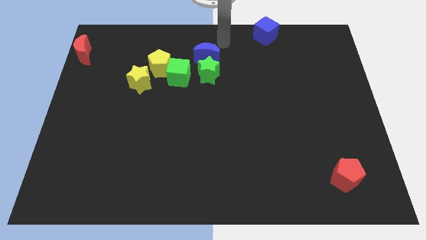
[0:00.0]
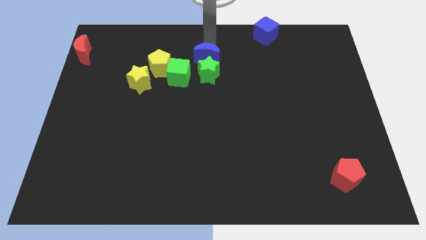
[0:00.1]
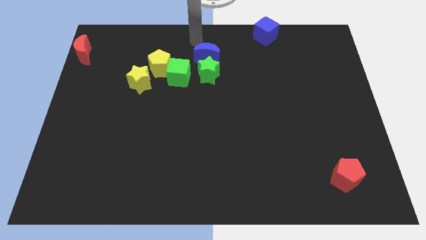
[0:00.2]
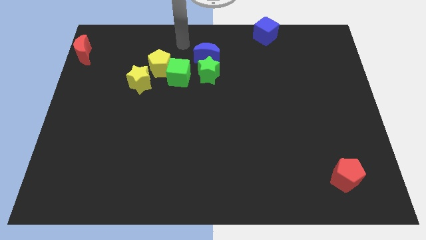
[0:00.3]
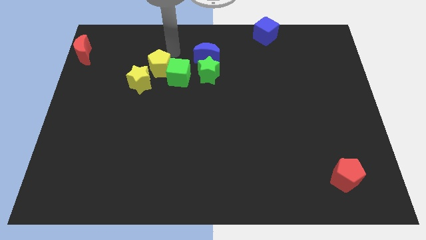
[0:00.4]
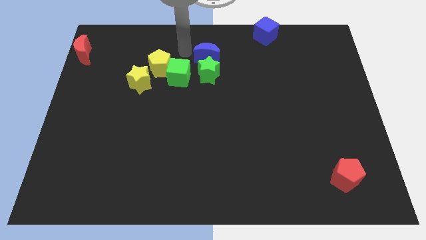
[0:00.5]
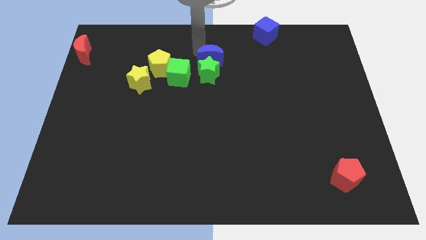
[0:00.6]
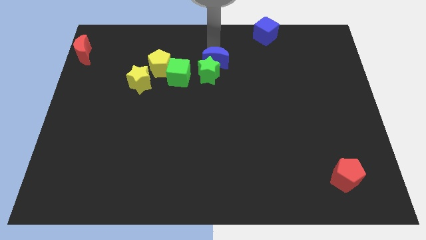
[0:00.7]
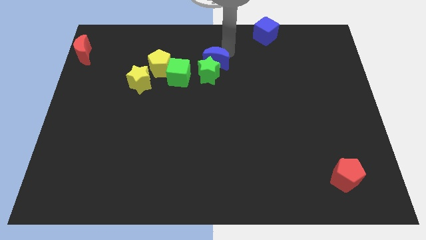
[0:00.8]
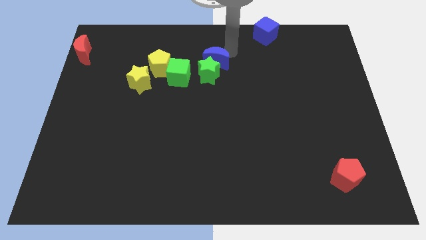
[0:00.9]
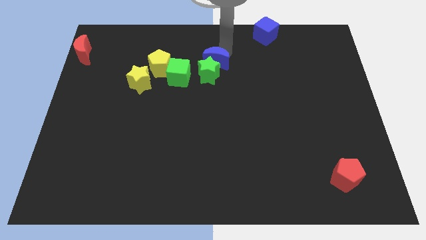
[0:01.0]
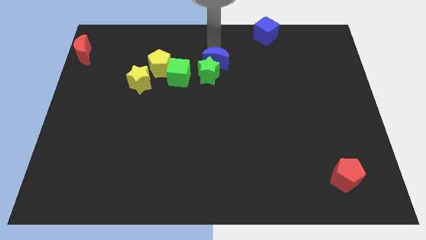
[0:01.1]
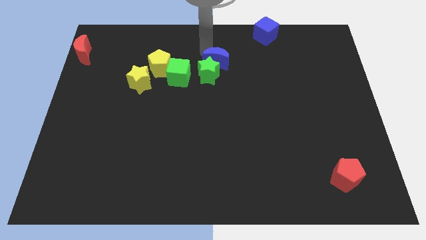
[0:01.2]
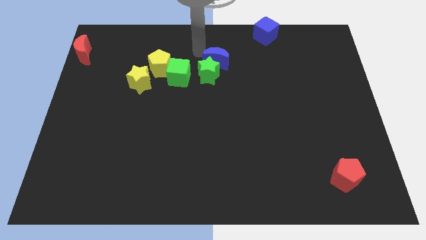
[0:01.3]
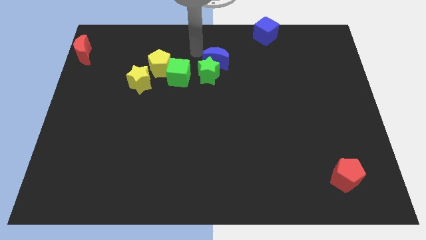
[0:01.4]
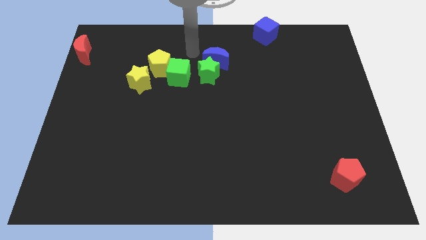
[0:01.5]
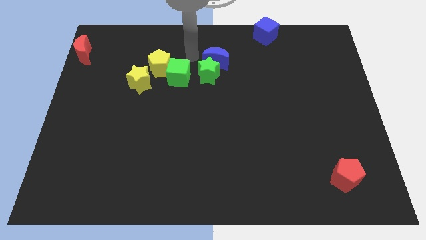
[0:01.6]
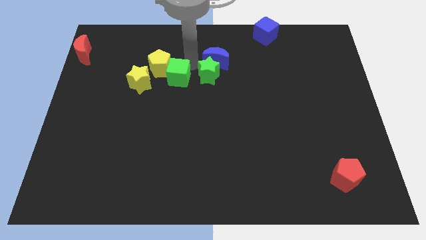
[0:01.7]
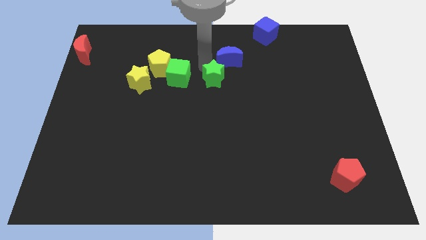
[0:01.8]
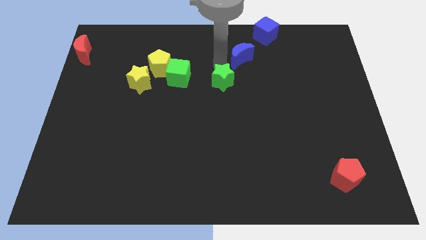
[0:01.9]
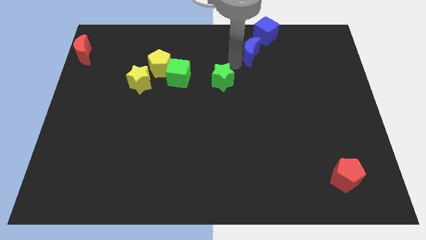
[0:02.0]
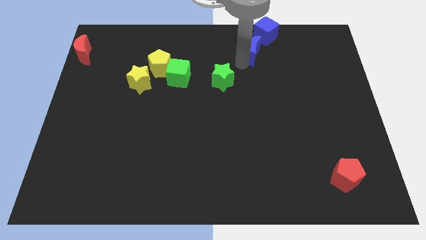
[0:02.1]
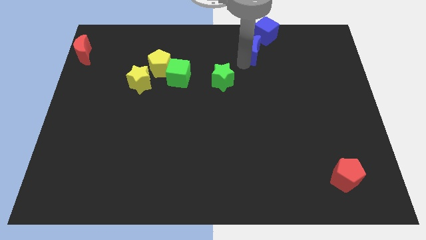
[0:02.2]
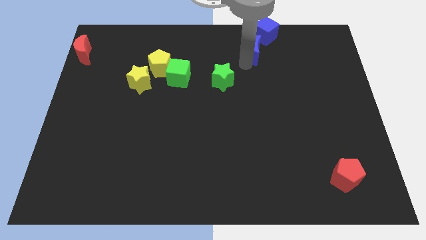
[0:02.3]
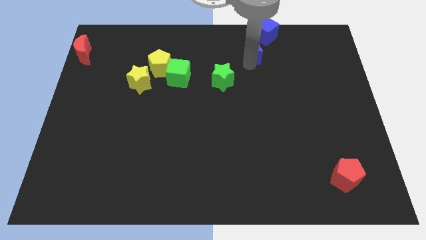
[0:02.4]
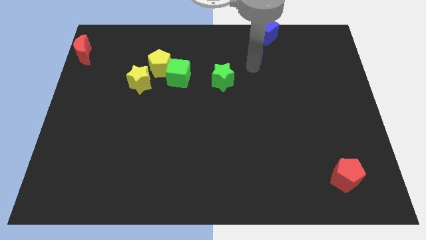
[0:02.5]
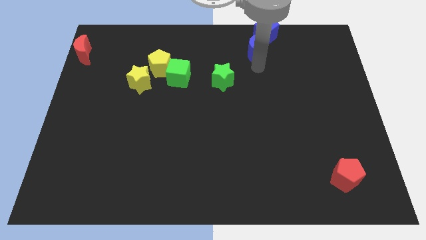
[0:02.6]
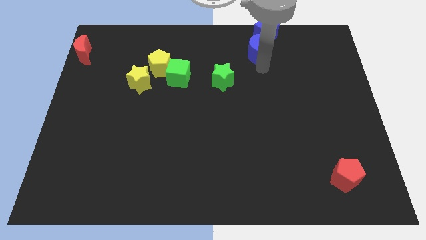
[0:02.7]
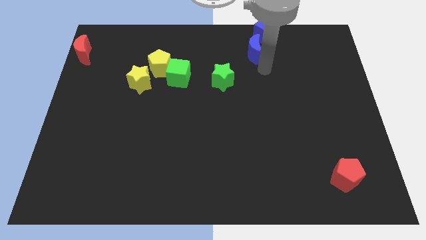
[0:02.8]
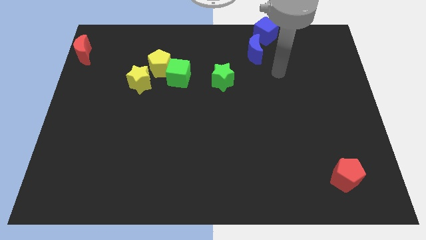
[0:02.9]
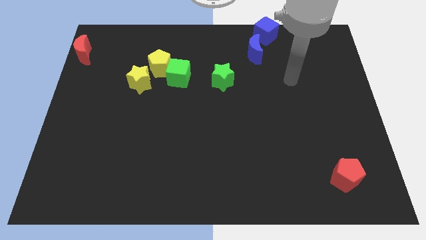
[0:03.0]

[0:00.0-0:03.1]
move blue crescent to the left of the blue cube

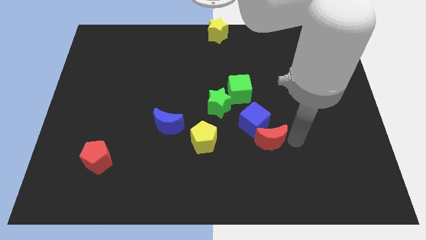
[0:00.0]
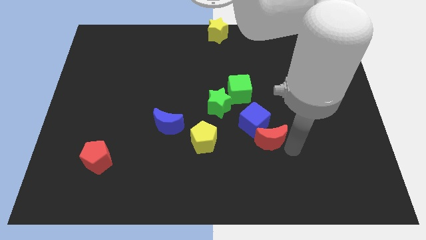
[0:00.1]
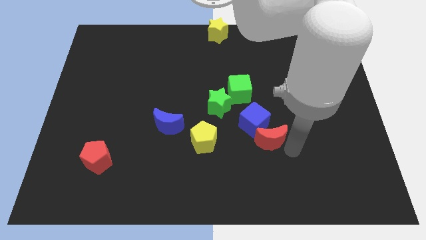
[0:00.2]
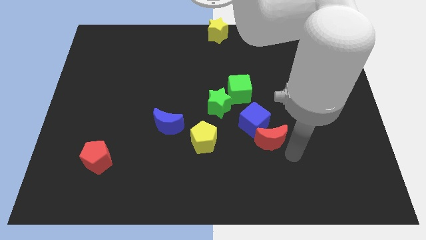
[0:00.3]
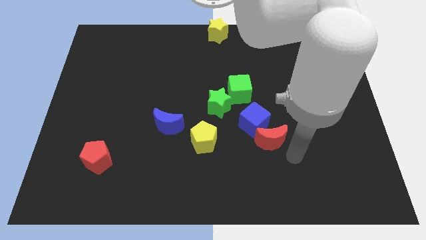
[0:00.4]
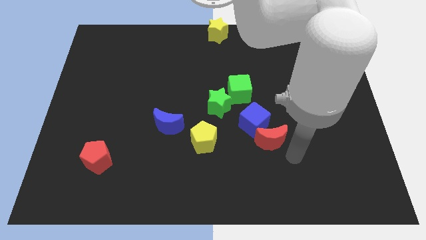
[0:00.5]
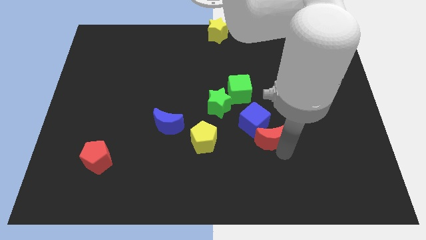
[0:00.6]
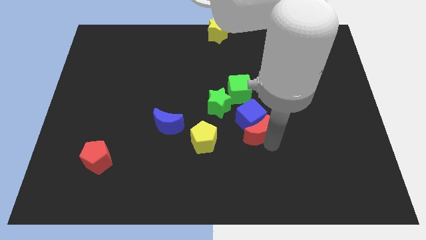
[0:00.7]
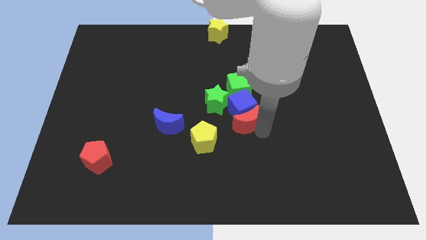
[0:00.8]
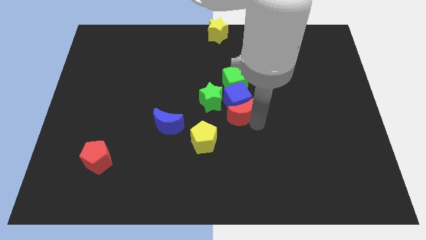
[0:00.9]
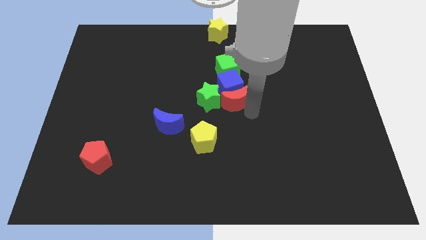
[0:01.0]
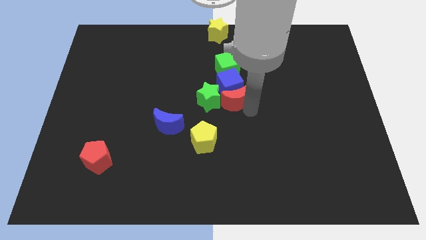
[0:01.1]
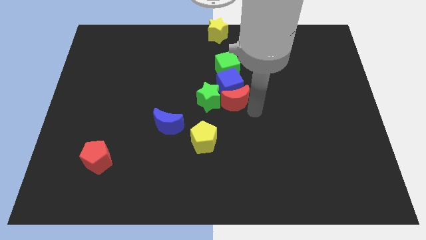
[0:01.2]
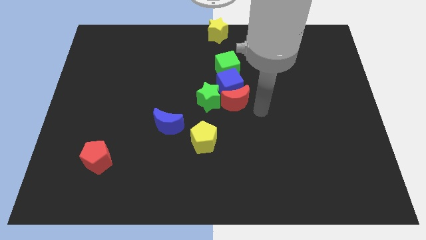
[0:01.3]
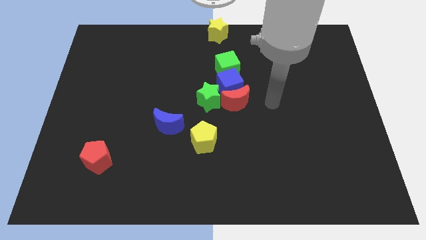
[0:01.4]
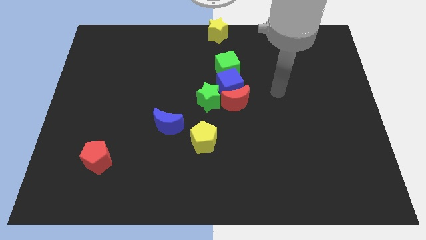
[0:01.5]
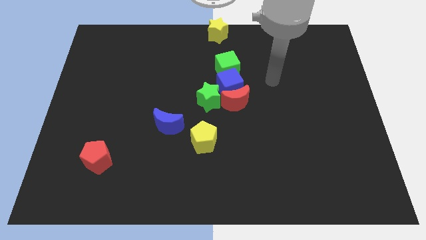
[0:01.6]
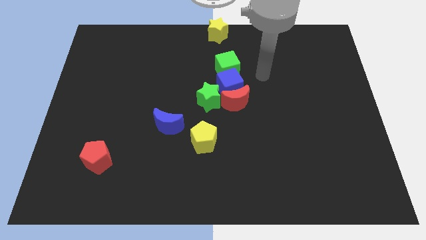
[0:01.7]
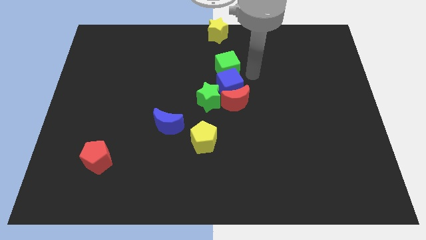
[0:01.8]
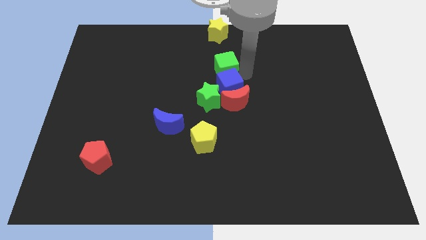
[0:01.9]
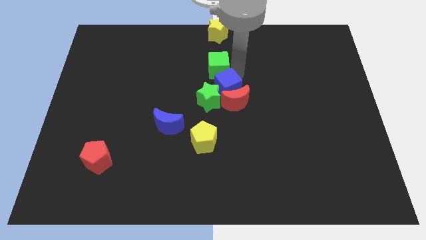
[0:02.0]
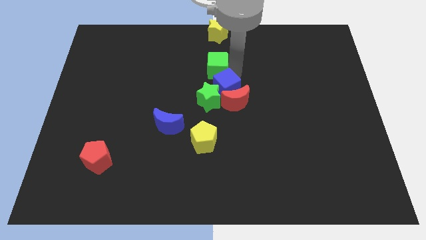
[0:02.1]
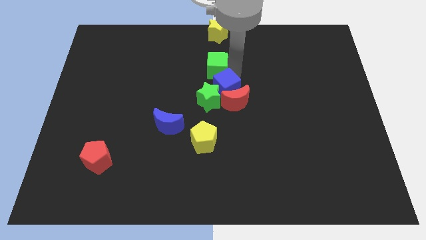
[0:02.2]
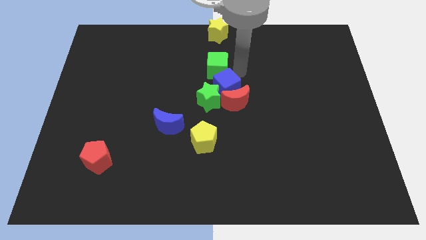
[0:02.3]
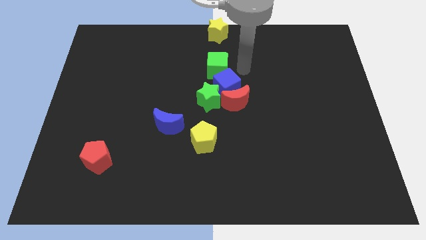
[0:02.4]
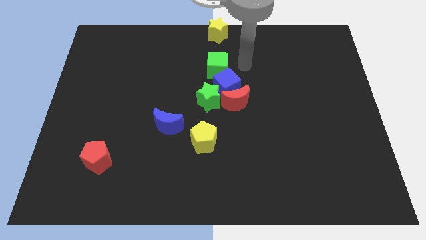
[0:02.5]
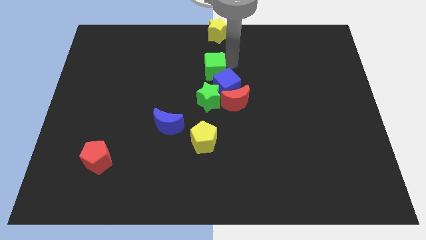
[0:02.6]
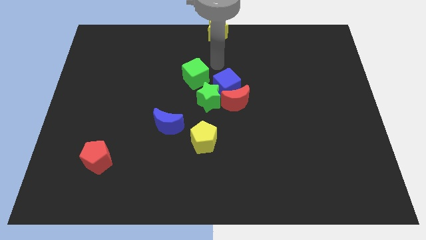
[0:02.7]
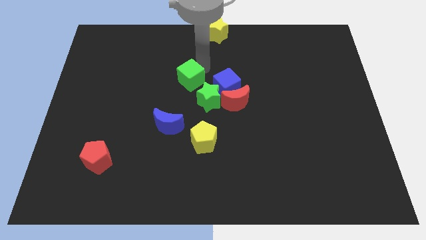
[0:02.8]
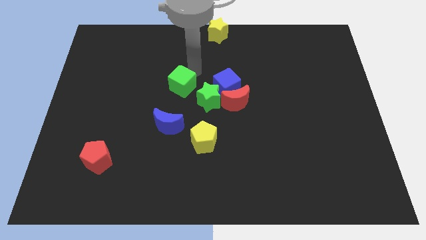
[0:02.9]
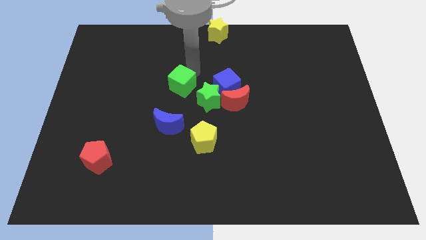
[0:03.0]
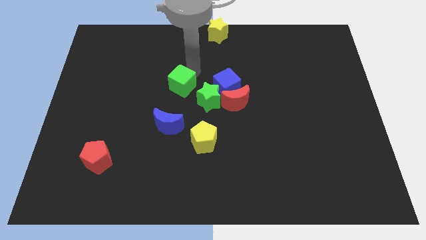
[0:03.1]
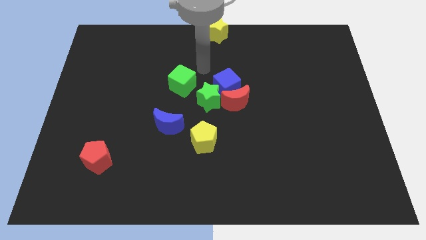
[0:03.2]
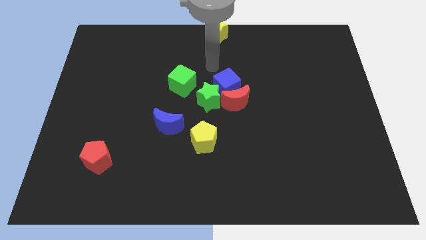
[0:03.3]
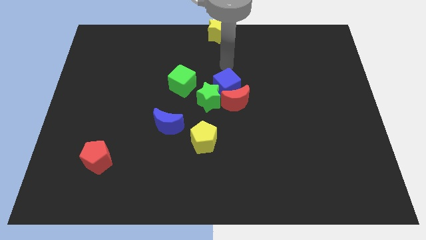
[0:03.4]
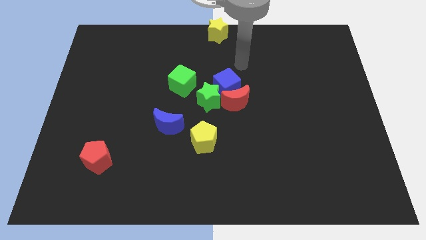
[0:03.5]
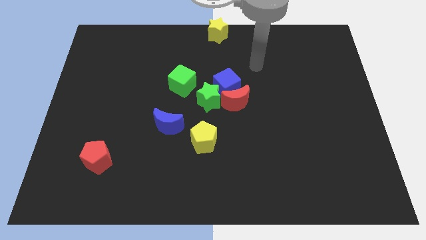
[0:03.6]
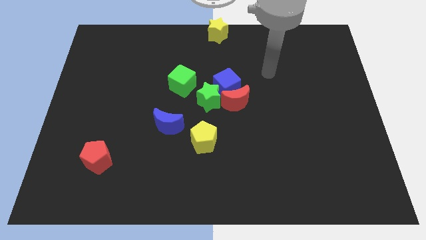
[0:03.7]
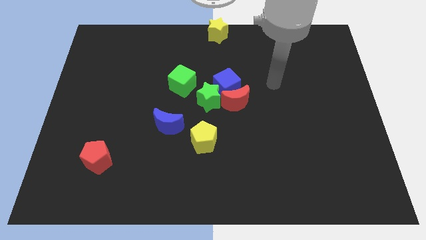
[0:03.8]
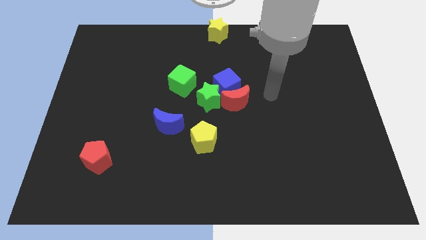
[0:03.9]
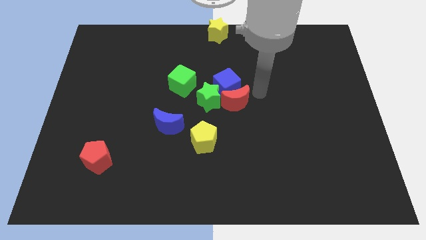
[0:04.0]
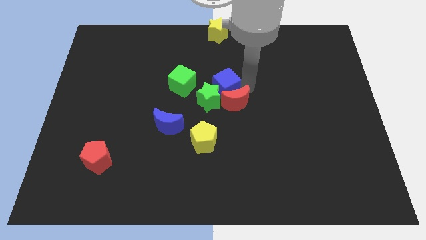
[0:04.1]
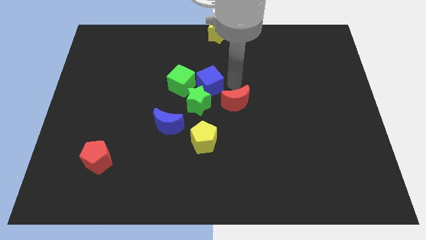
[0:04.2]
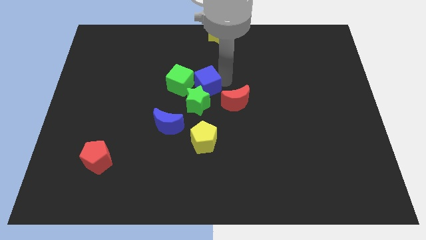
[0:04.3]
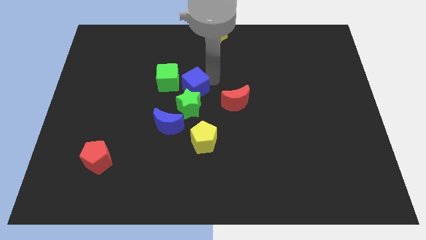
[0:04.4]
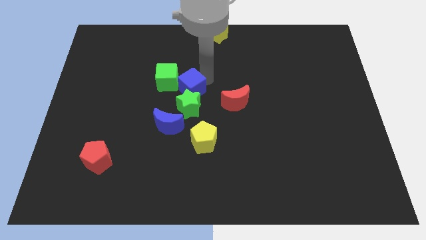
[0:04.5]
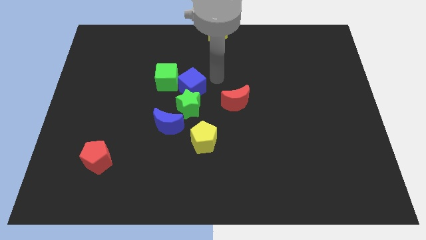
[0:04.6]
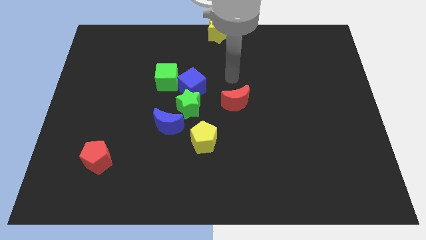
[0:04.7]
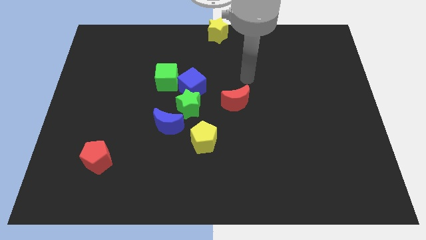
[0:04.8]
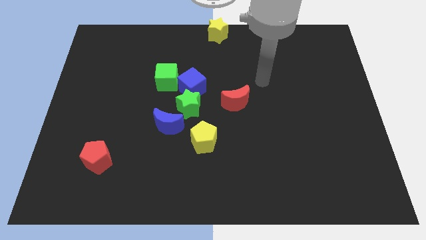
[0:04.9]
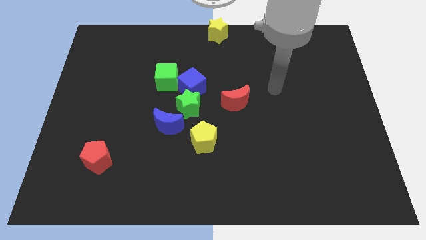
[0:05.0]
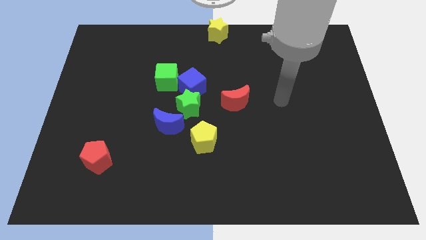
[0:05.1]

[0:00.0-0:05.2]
move the red moon blue cube and green cube slightly towards center left

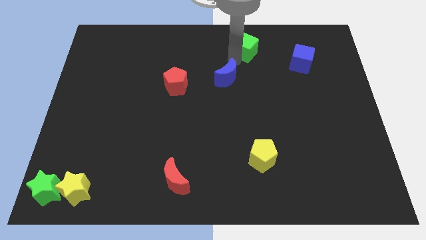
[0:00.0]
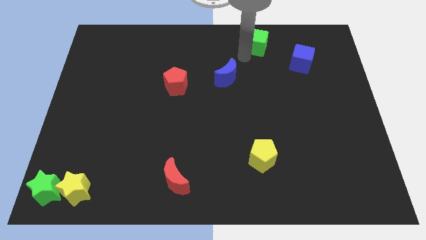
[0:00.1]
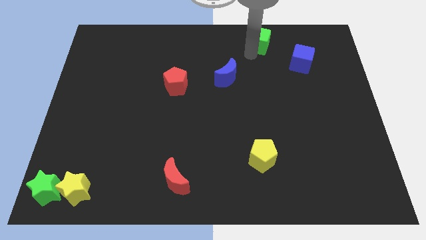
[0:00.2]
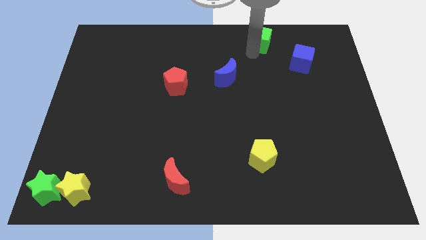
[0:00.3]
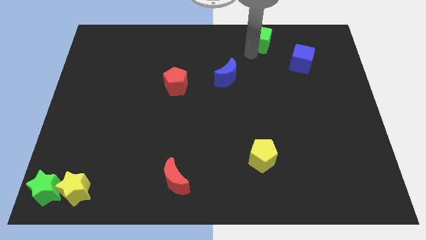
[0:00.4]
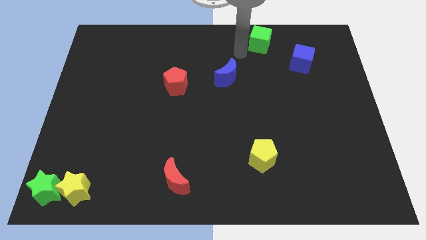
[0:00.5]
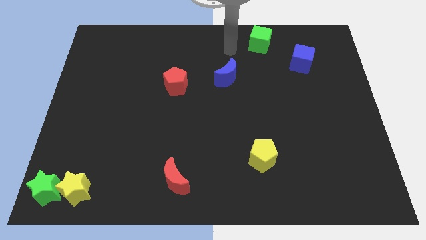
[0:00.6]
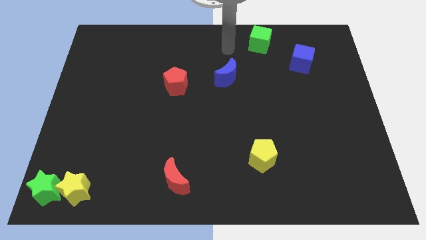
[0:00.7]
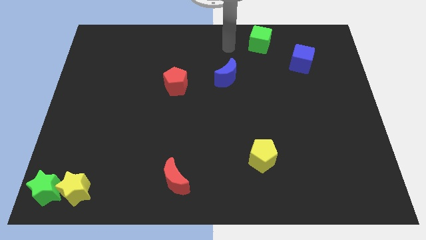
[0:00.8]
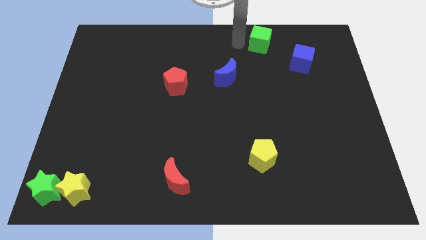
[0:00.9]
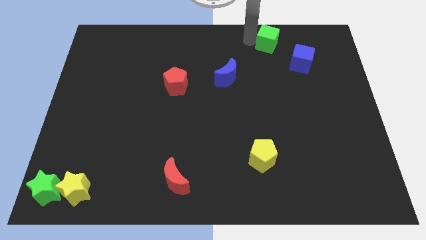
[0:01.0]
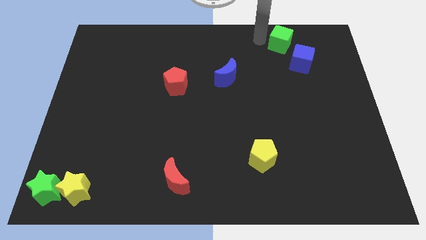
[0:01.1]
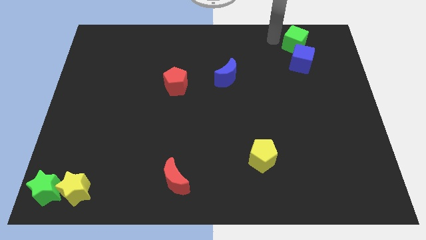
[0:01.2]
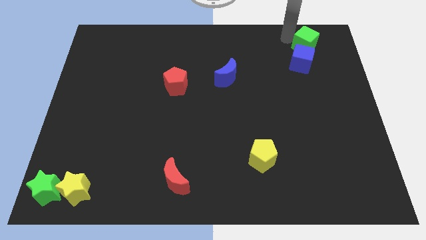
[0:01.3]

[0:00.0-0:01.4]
place the green cube above the blue cube
